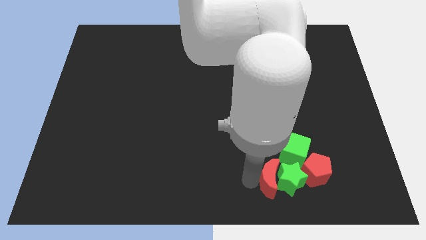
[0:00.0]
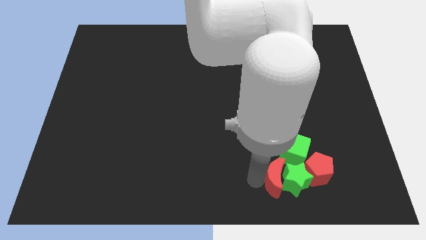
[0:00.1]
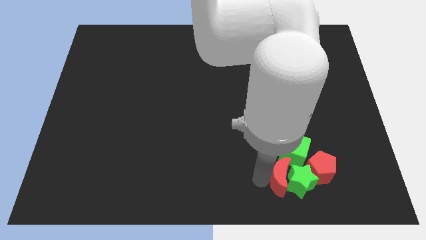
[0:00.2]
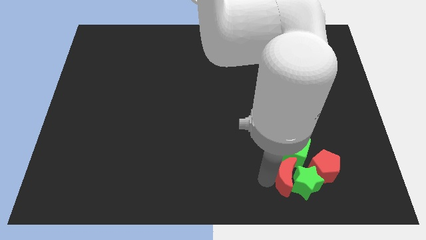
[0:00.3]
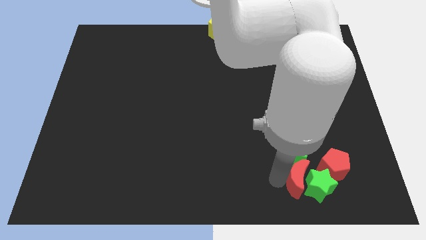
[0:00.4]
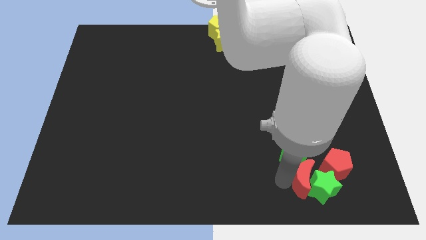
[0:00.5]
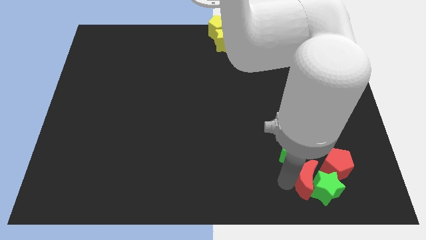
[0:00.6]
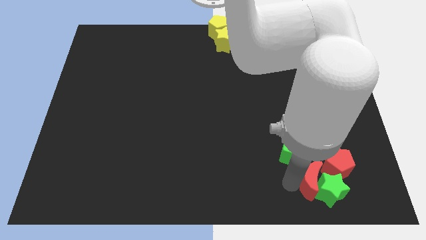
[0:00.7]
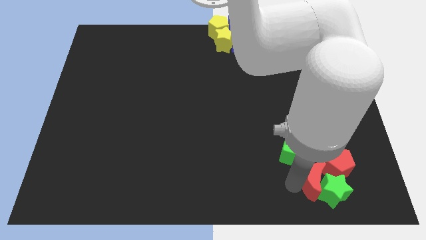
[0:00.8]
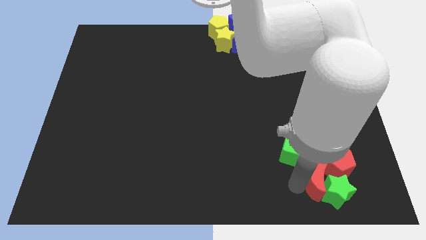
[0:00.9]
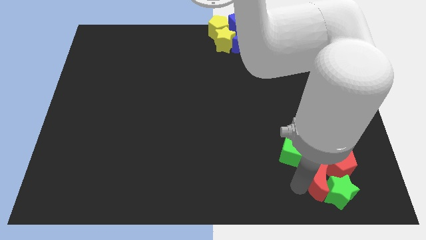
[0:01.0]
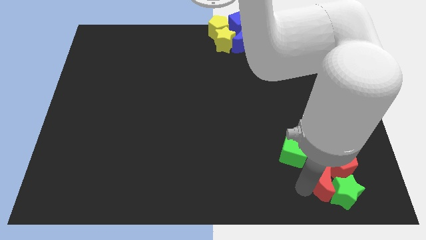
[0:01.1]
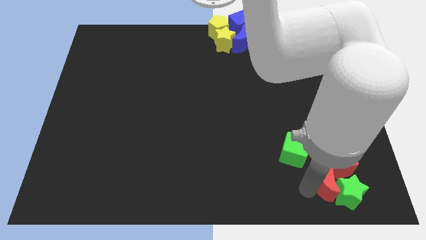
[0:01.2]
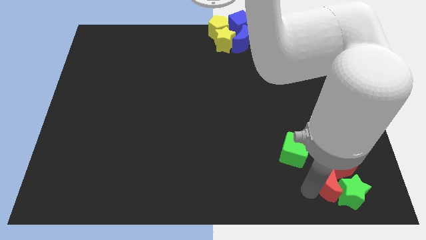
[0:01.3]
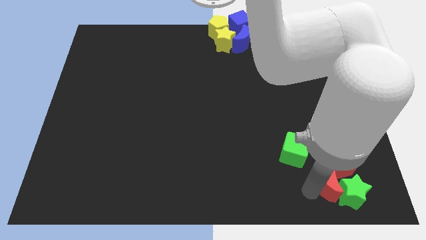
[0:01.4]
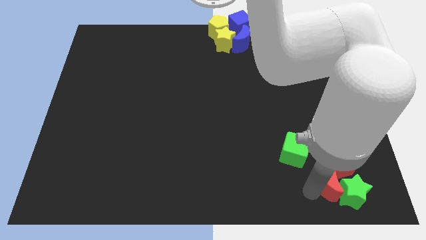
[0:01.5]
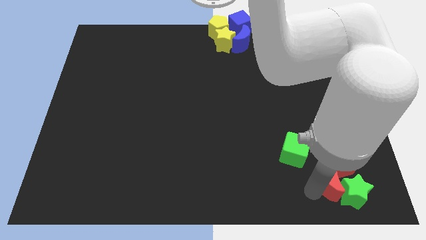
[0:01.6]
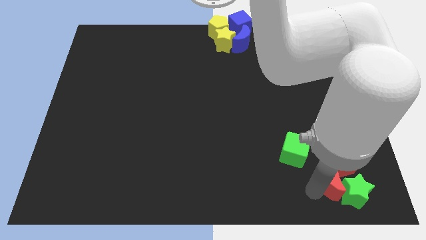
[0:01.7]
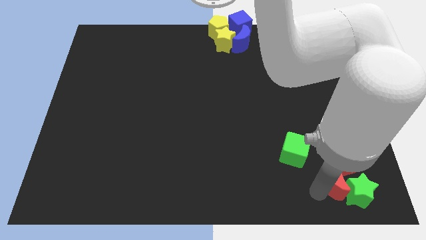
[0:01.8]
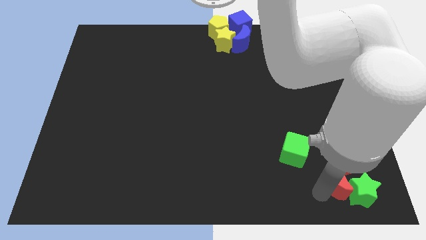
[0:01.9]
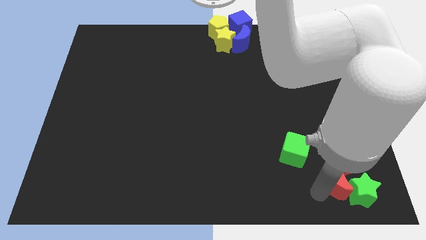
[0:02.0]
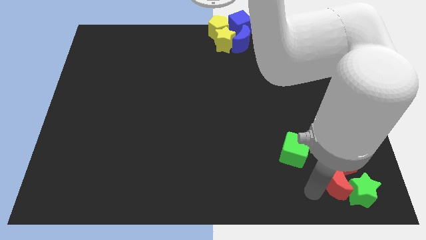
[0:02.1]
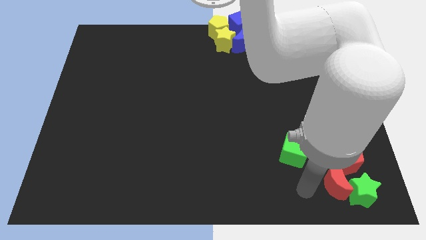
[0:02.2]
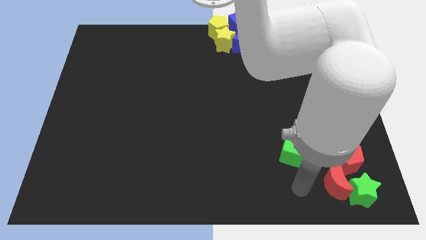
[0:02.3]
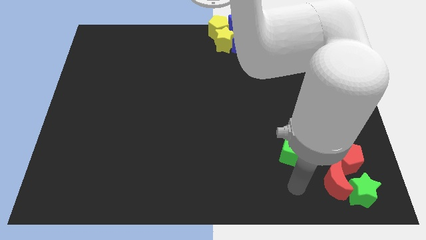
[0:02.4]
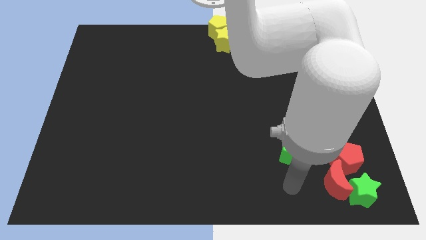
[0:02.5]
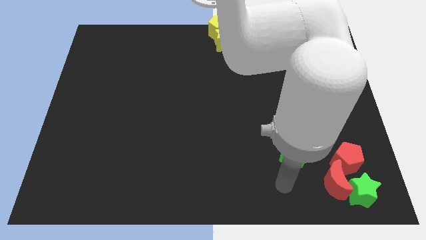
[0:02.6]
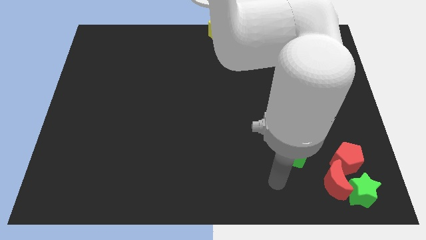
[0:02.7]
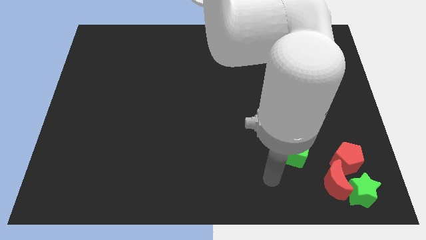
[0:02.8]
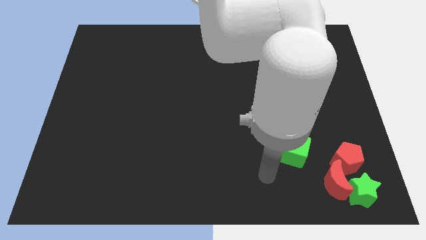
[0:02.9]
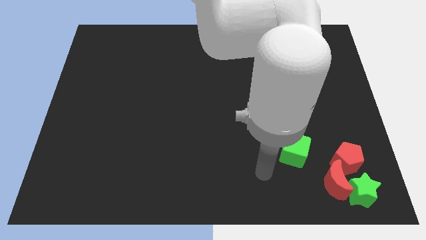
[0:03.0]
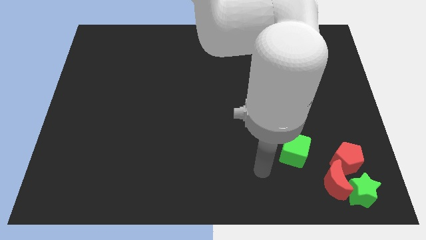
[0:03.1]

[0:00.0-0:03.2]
push the green star and the red crescent towards the bottom right corner of the board

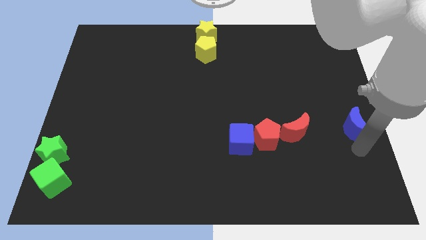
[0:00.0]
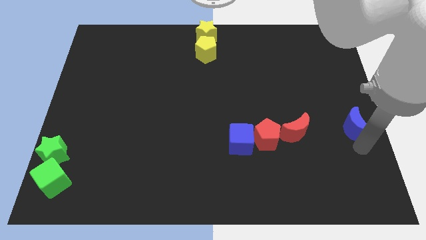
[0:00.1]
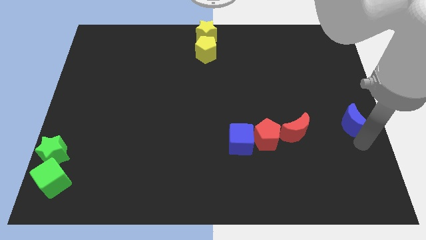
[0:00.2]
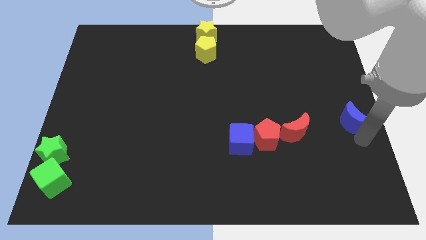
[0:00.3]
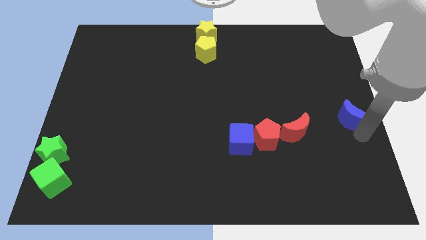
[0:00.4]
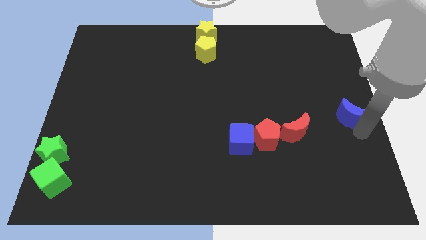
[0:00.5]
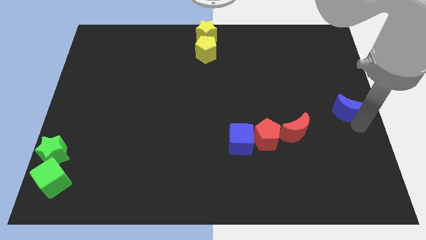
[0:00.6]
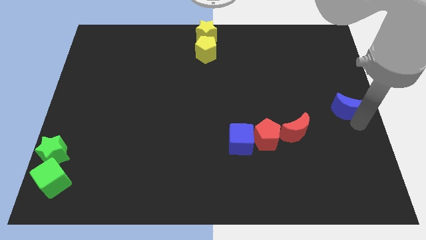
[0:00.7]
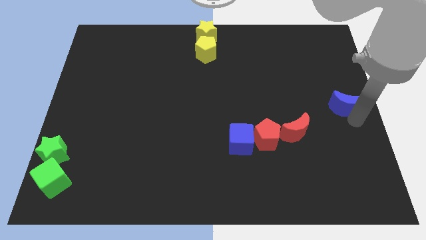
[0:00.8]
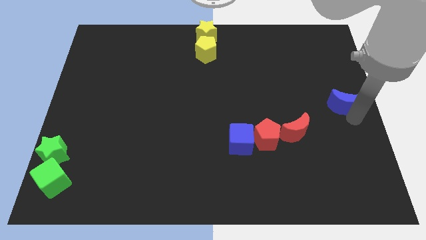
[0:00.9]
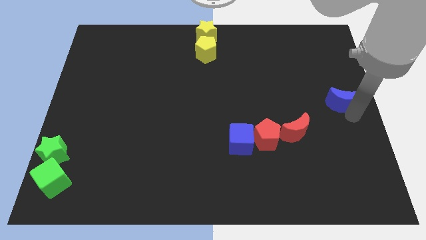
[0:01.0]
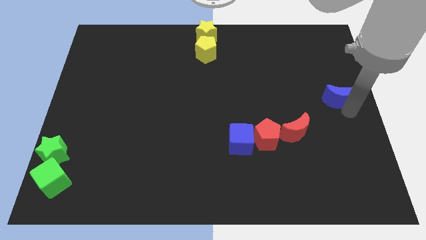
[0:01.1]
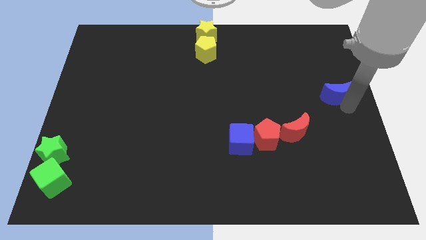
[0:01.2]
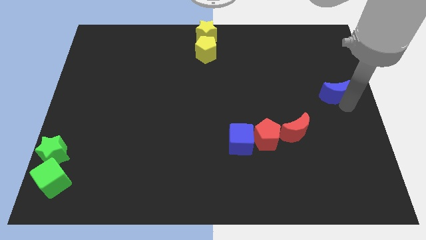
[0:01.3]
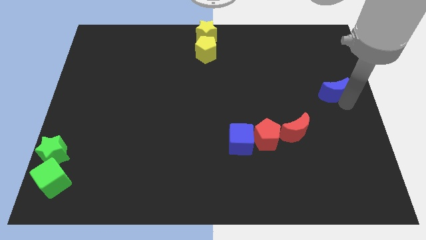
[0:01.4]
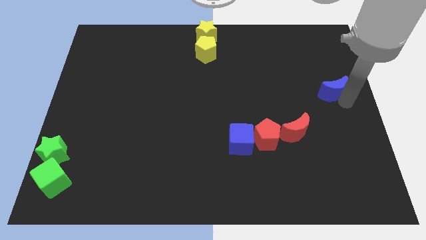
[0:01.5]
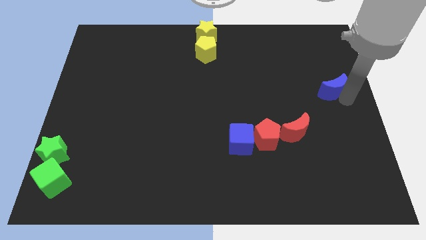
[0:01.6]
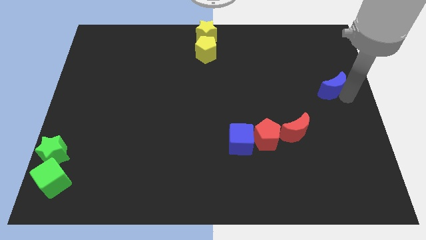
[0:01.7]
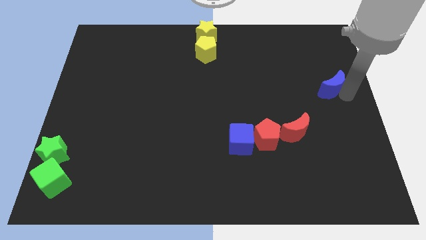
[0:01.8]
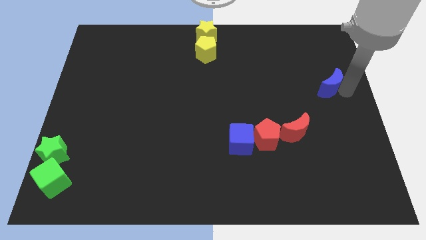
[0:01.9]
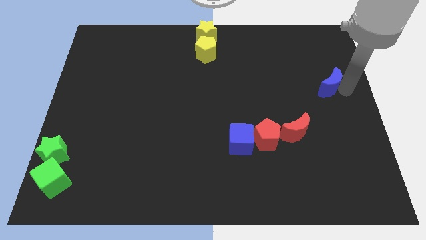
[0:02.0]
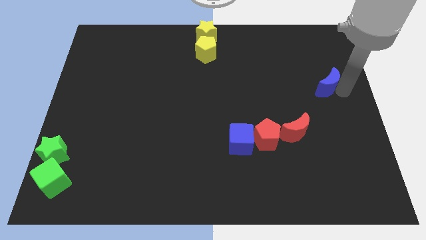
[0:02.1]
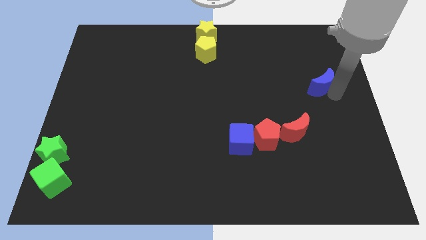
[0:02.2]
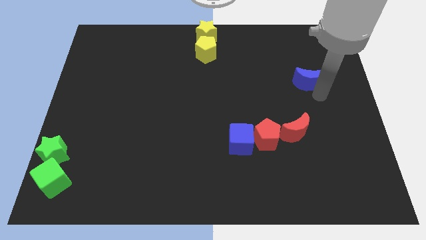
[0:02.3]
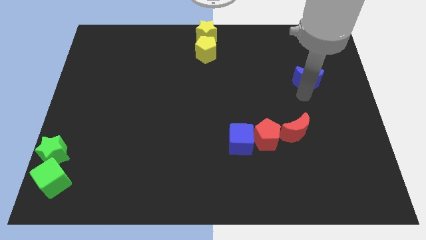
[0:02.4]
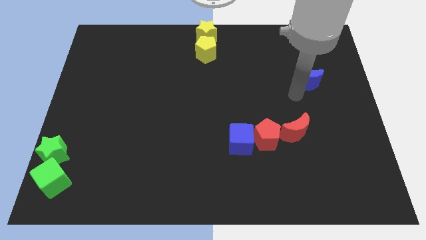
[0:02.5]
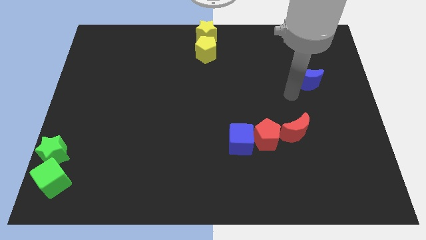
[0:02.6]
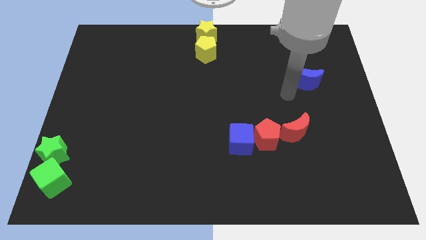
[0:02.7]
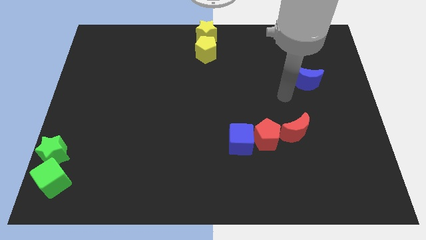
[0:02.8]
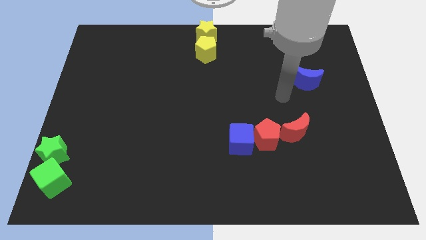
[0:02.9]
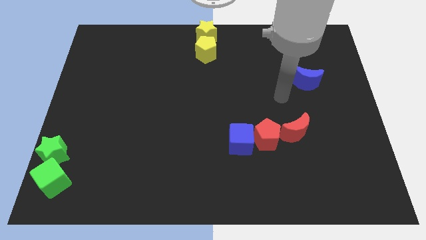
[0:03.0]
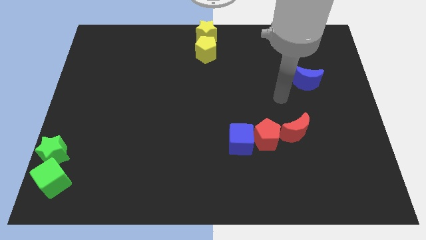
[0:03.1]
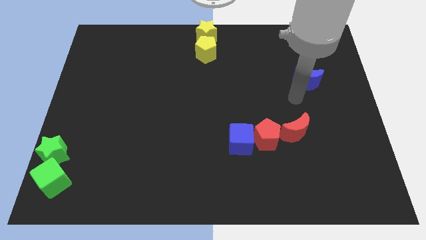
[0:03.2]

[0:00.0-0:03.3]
move the blue moon to the center

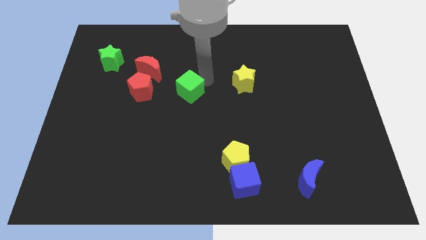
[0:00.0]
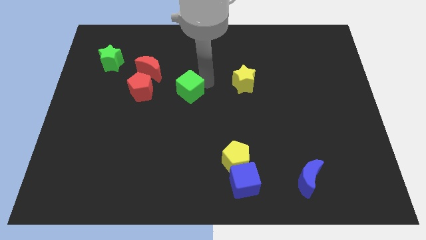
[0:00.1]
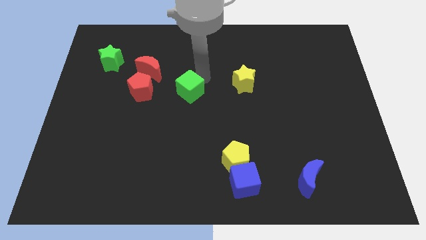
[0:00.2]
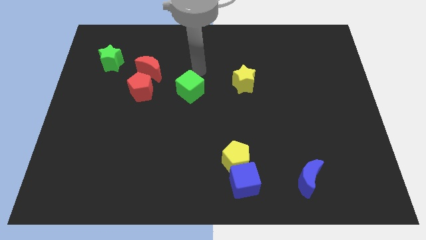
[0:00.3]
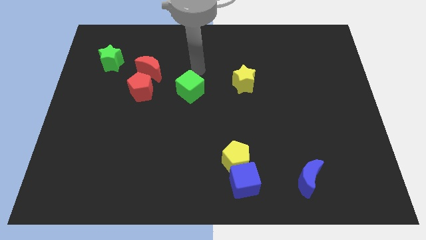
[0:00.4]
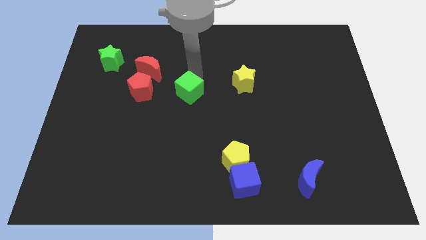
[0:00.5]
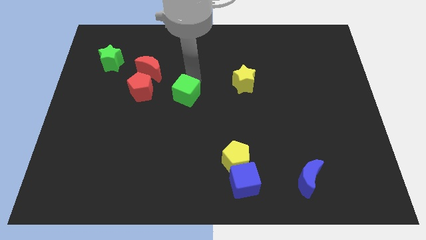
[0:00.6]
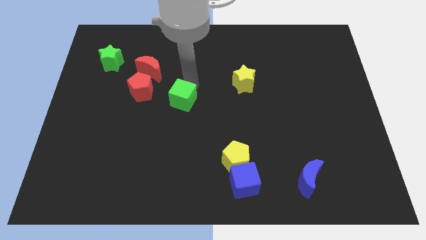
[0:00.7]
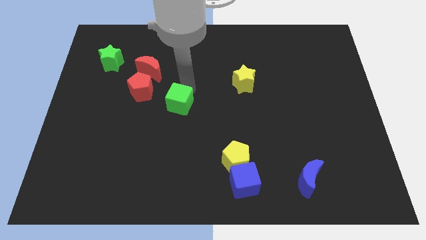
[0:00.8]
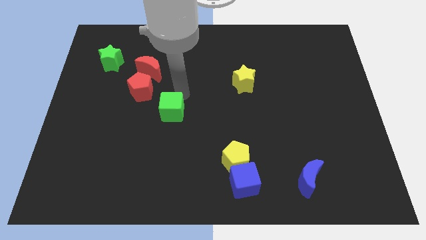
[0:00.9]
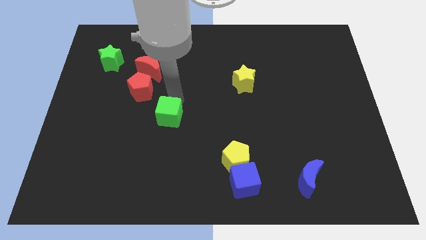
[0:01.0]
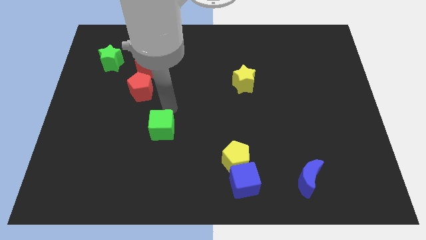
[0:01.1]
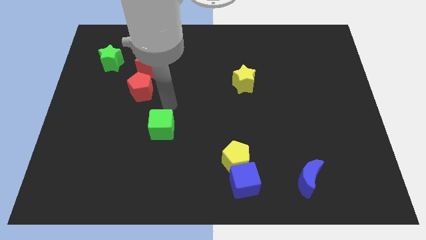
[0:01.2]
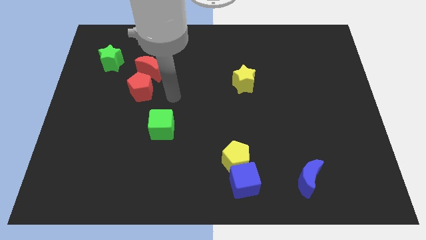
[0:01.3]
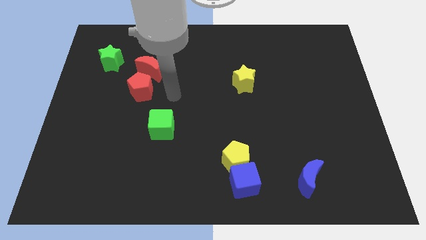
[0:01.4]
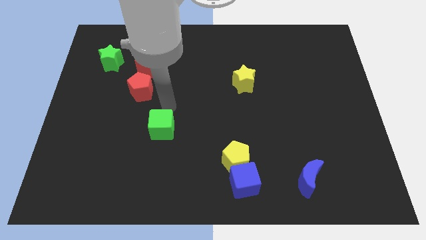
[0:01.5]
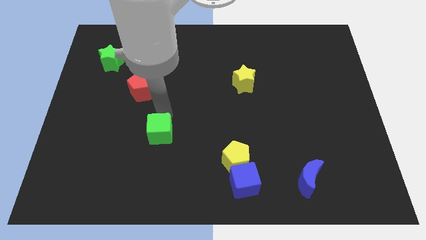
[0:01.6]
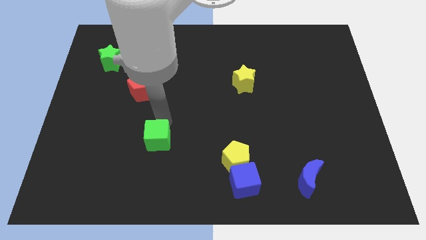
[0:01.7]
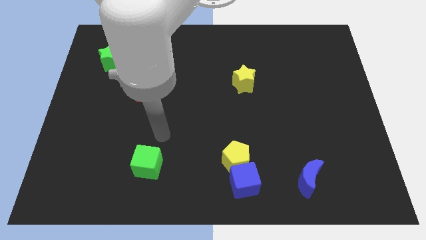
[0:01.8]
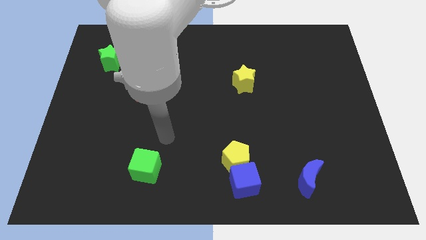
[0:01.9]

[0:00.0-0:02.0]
move the green cube to the horizontal to the yellow pentagon

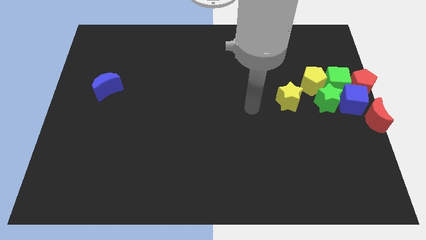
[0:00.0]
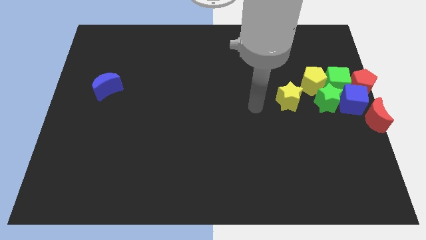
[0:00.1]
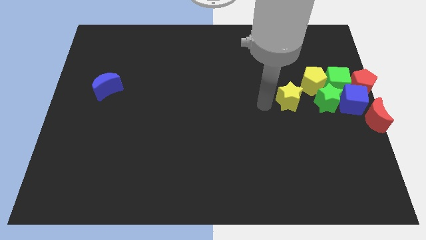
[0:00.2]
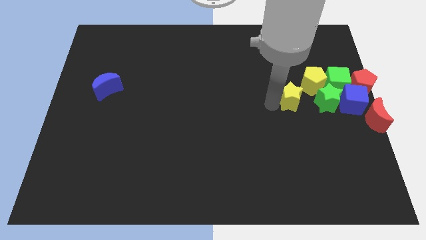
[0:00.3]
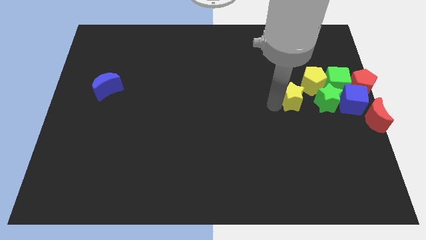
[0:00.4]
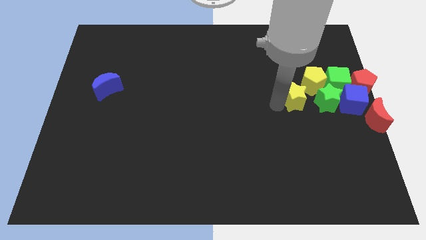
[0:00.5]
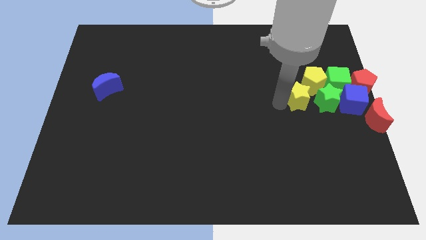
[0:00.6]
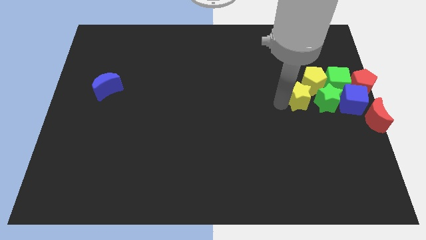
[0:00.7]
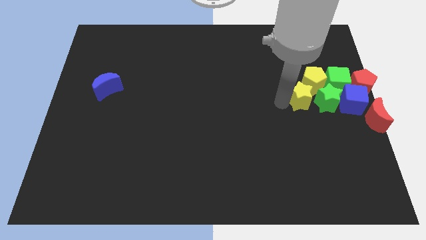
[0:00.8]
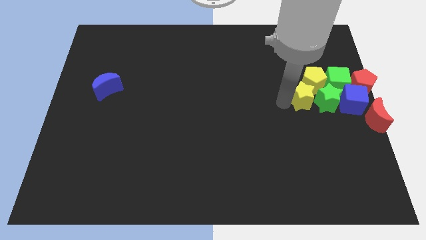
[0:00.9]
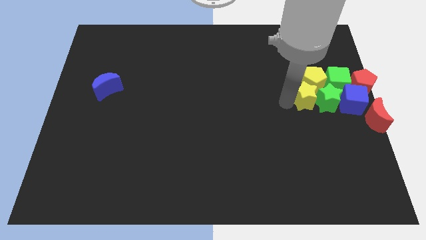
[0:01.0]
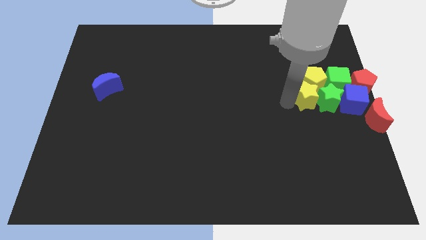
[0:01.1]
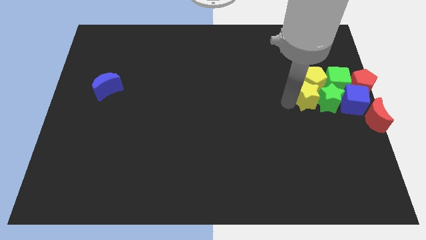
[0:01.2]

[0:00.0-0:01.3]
move the yellow star slightly towards the green star
